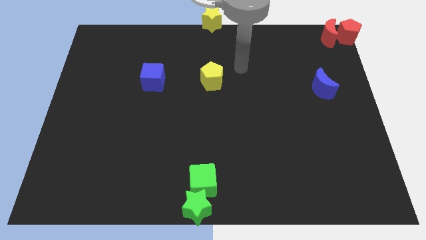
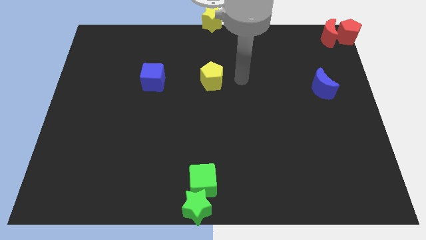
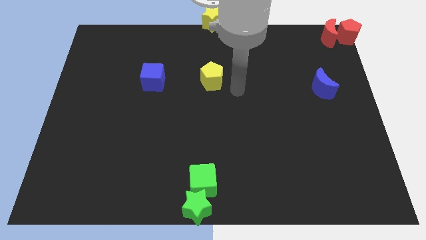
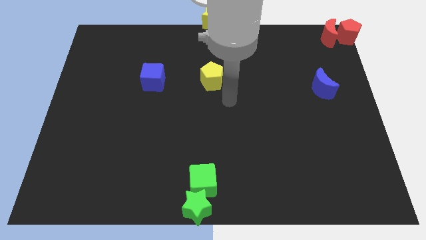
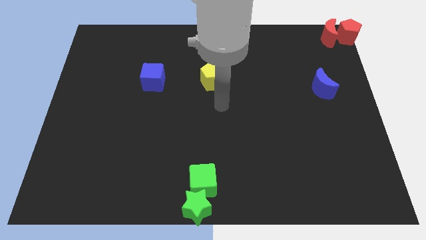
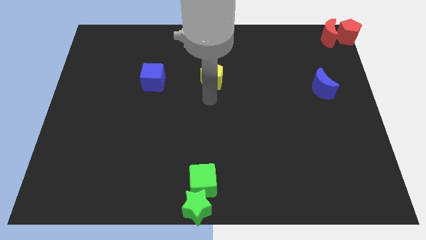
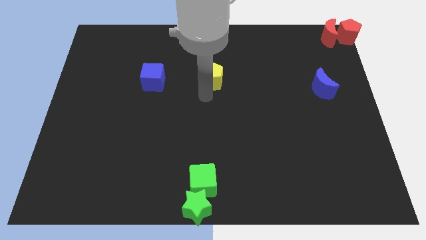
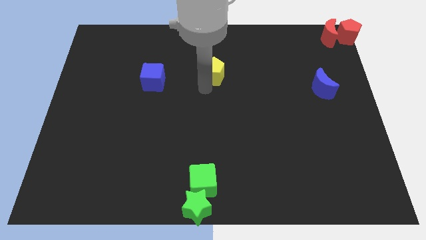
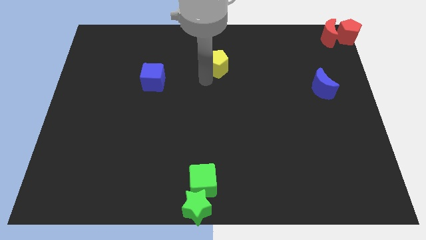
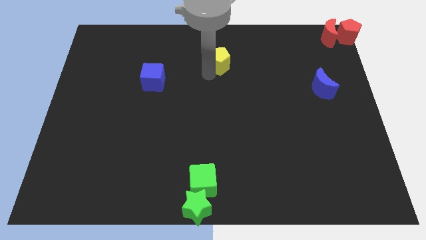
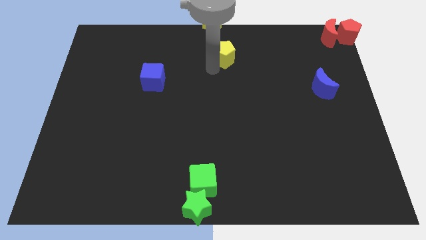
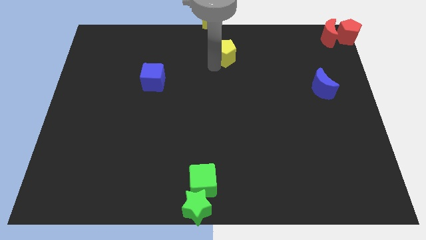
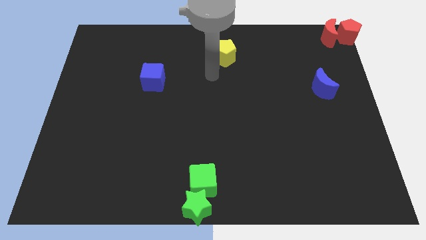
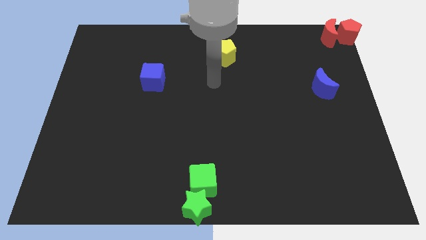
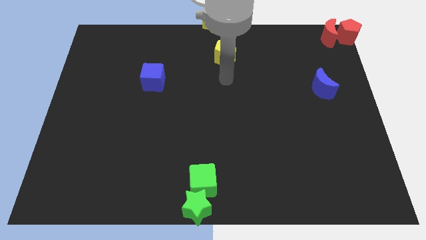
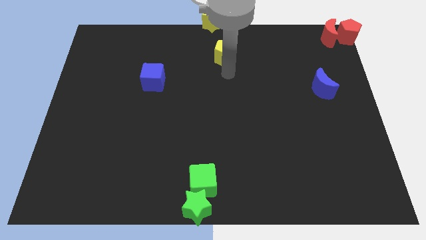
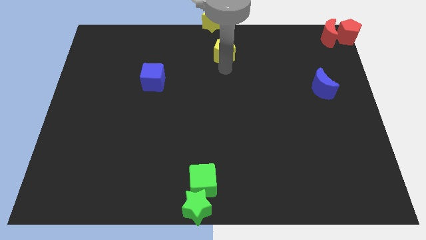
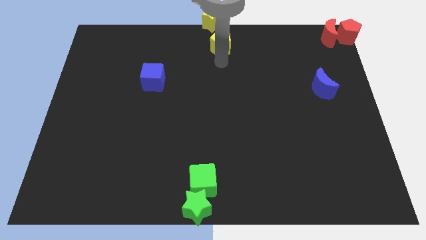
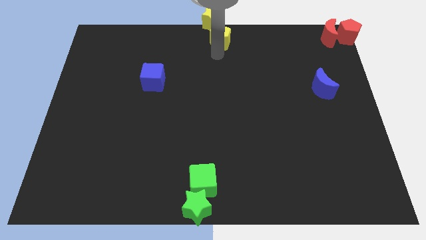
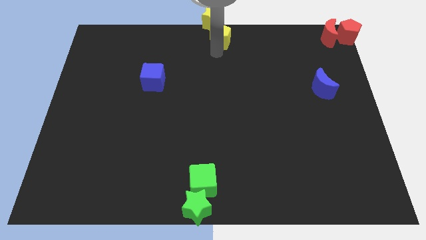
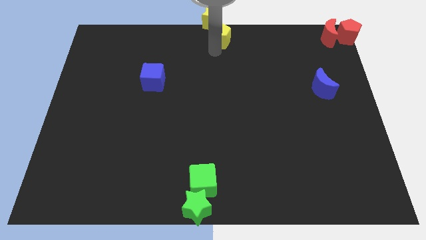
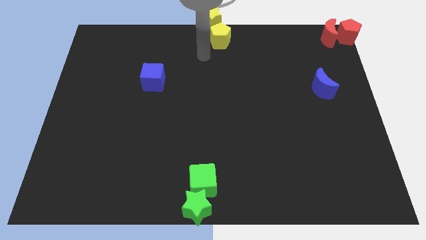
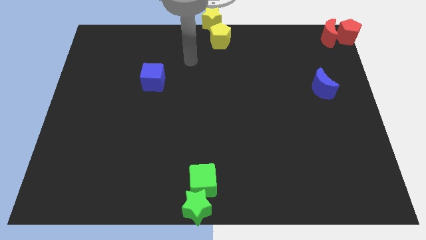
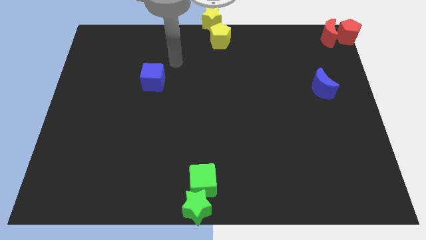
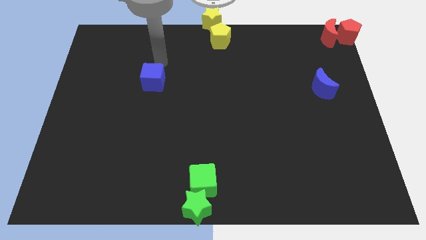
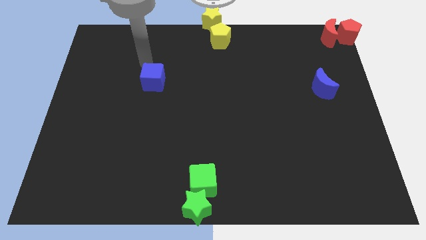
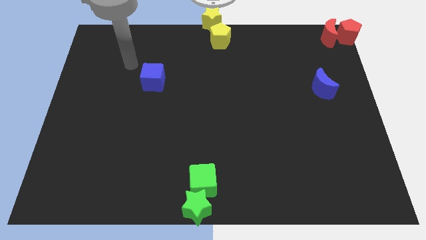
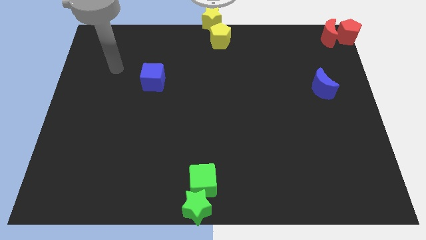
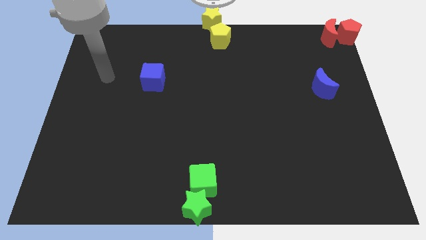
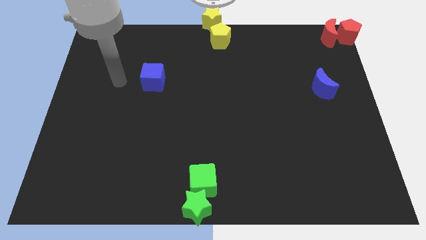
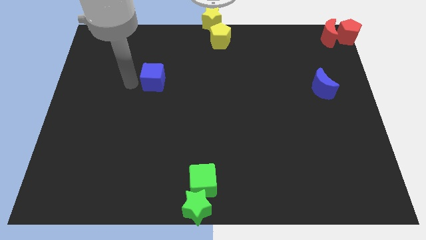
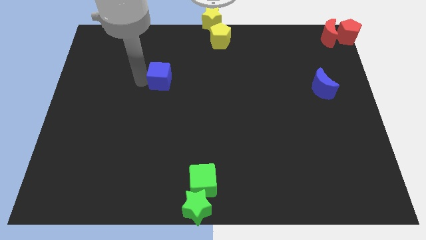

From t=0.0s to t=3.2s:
move the yellow pentagon close to the yellow star

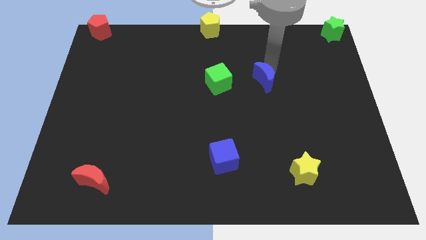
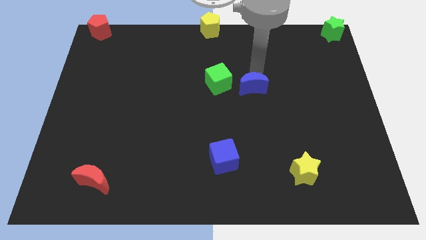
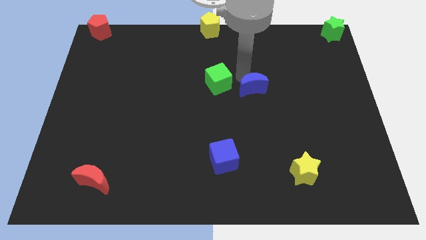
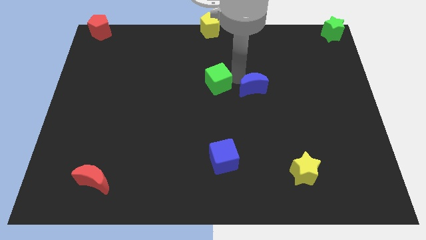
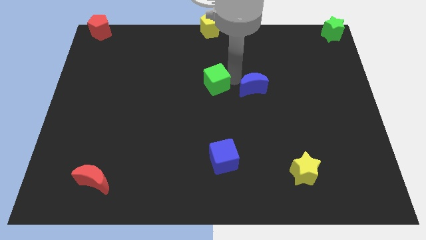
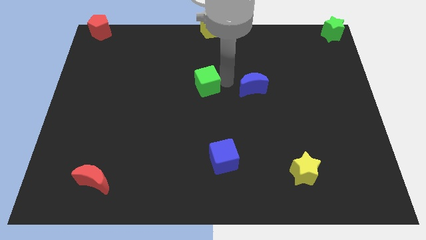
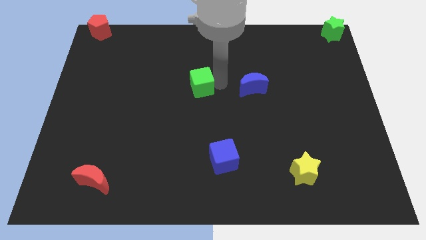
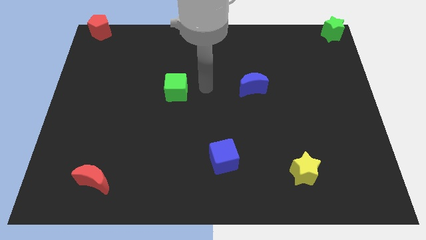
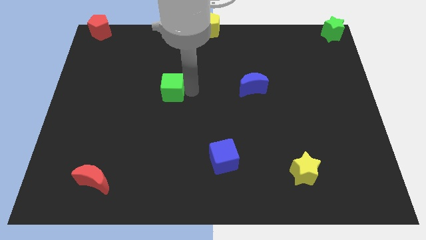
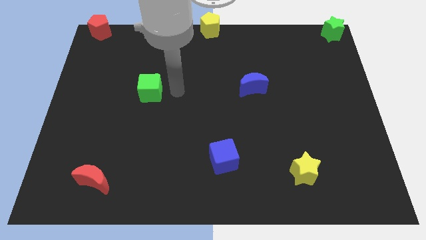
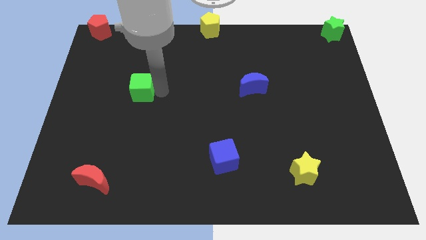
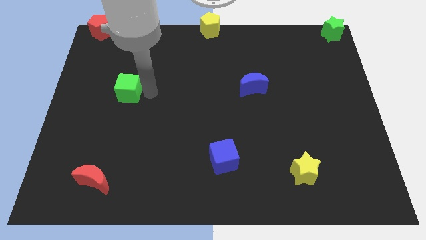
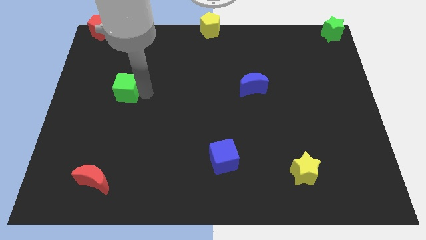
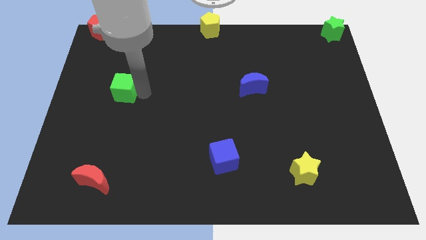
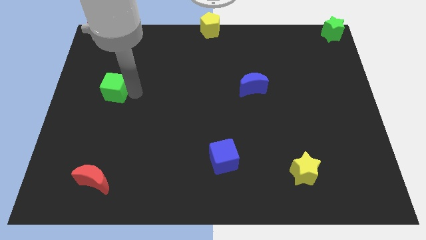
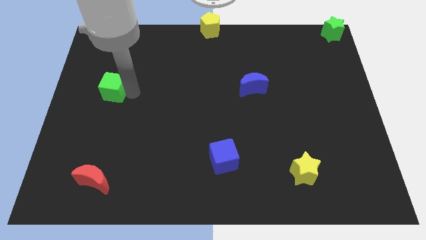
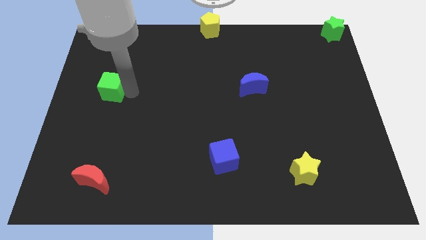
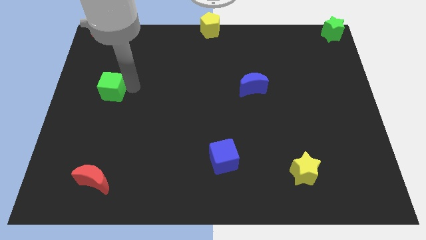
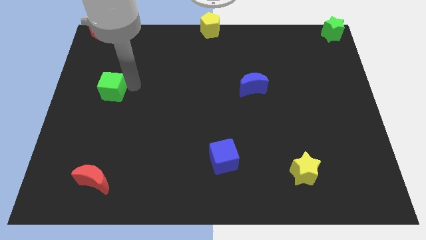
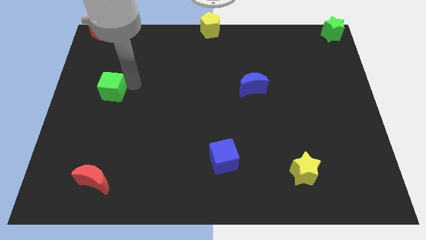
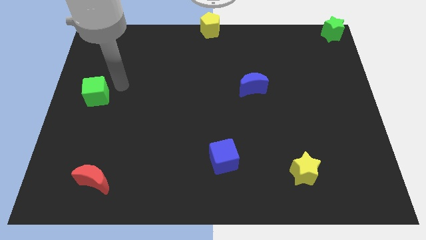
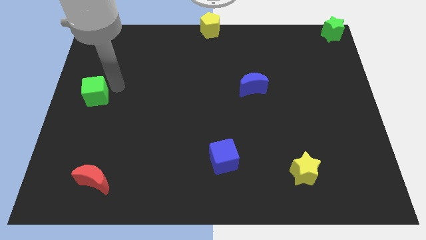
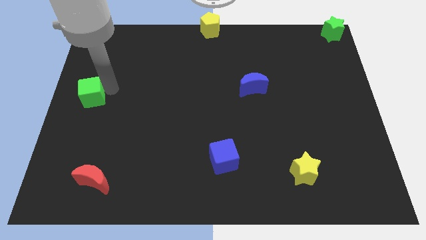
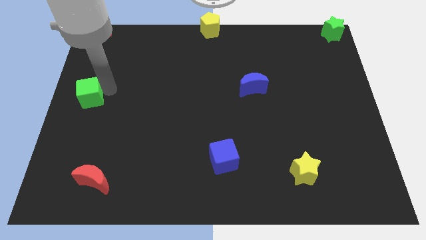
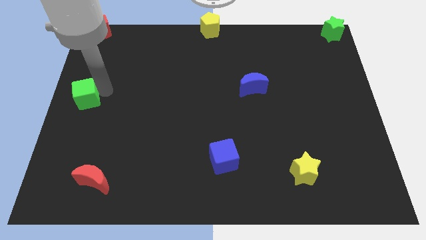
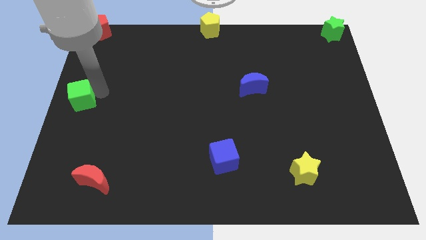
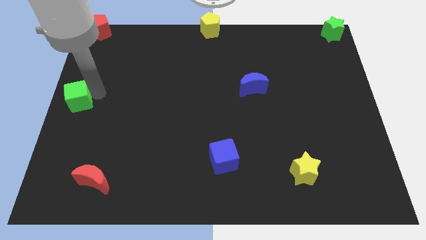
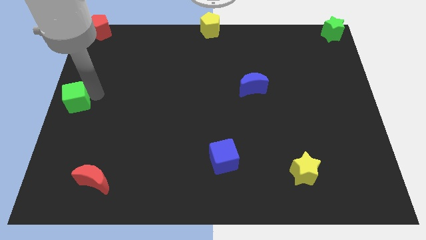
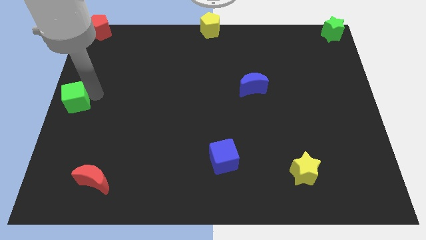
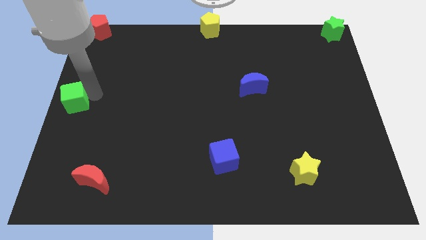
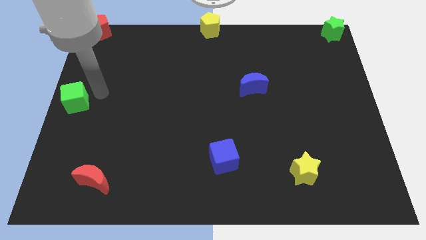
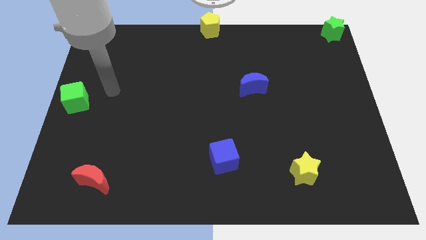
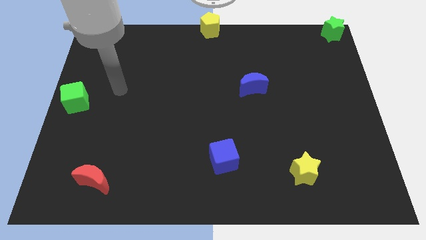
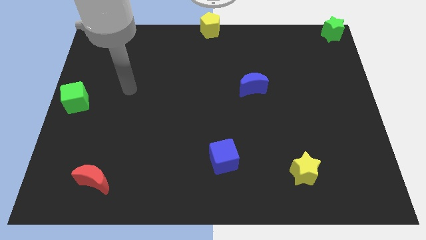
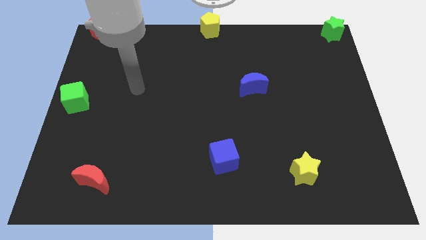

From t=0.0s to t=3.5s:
push the green cube towards the left center of the board

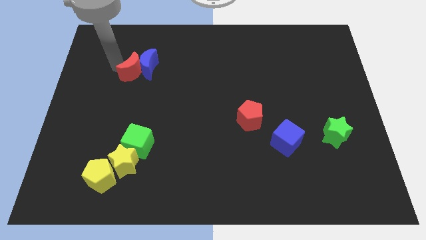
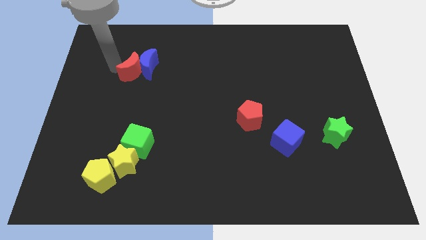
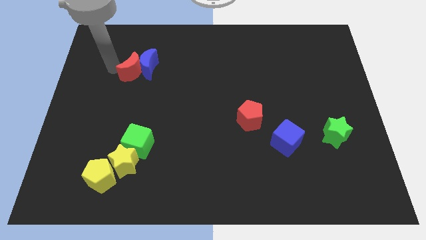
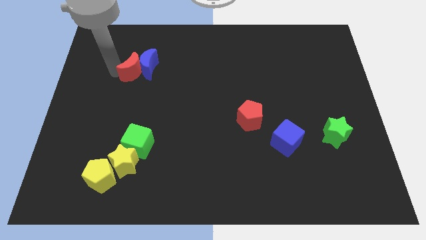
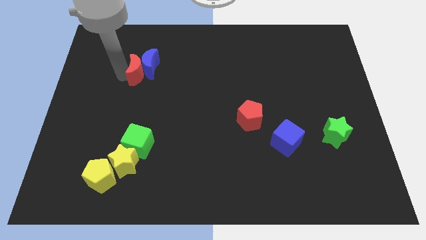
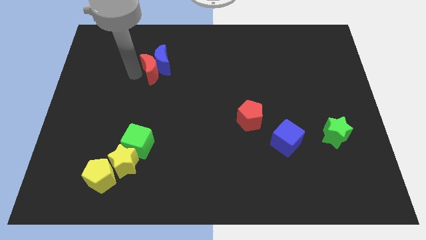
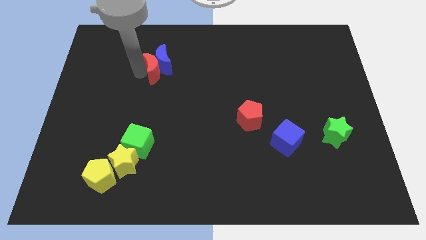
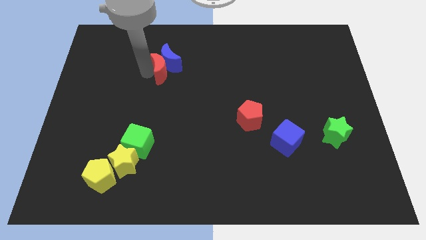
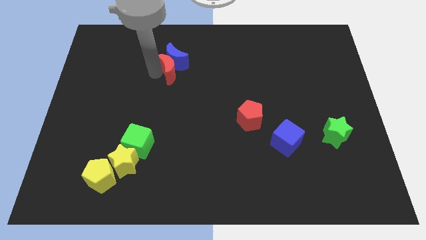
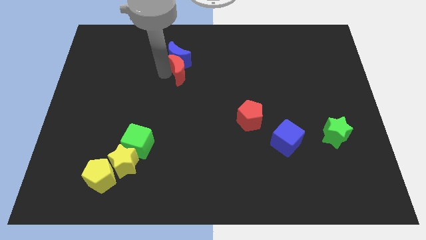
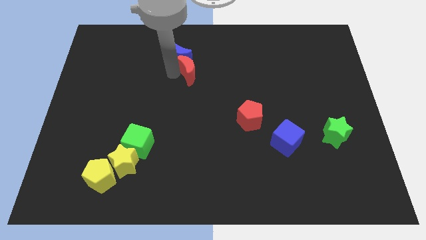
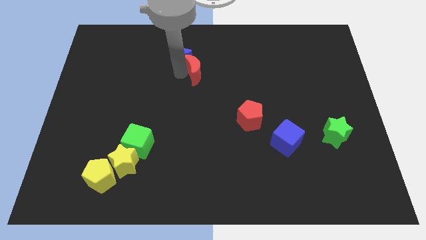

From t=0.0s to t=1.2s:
push the red and blue moons towards the right

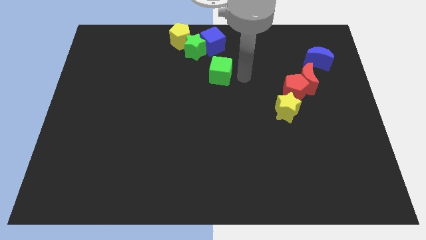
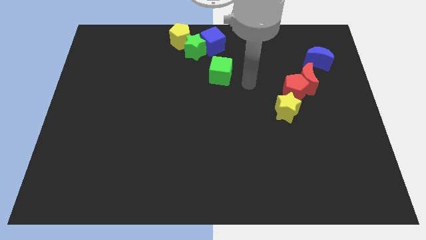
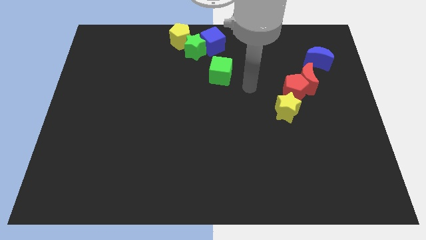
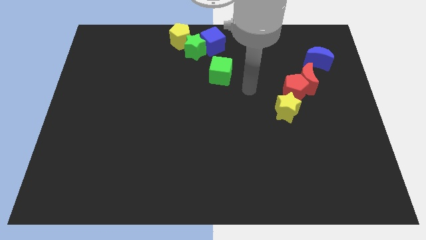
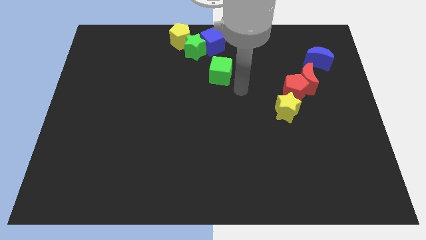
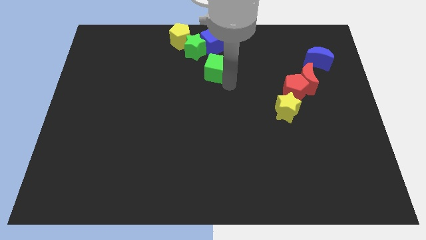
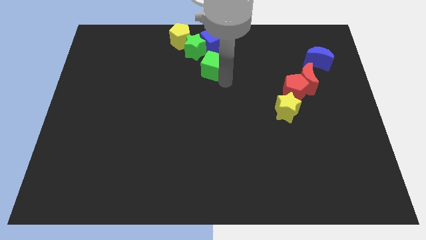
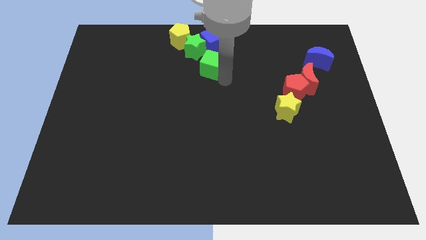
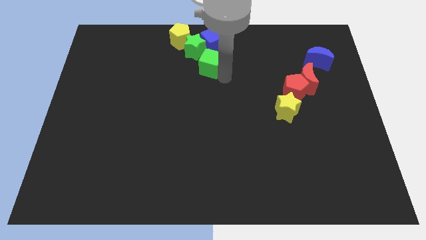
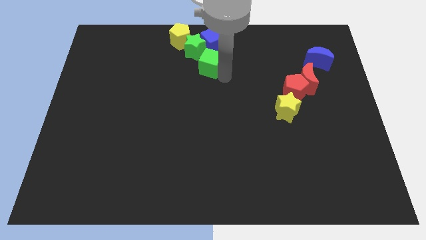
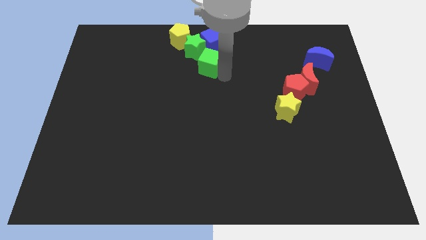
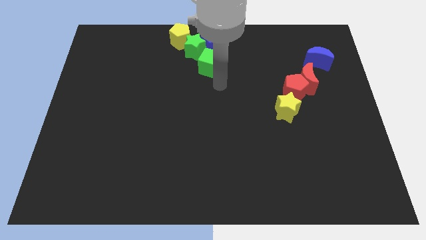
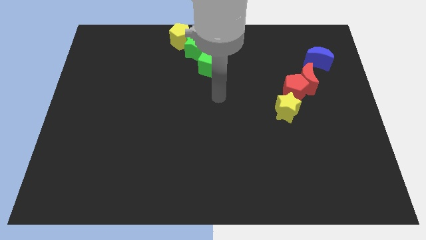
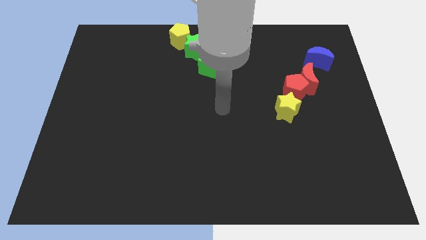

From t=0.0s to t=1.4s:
push the green cube to the bottom right of the green star
